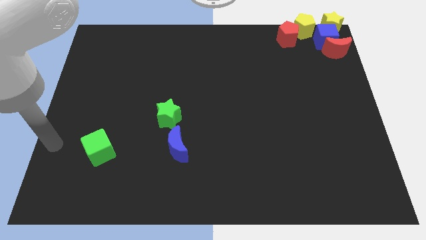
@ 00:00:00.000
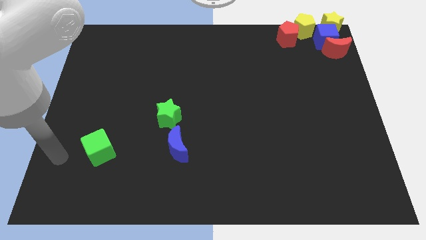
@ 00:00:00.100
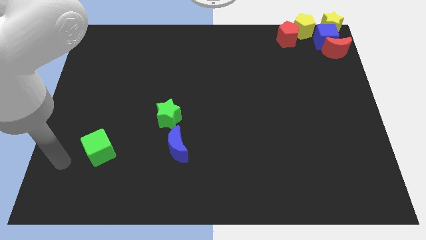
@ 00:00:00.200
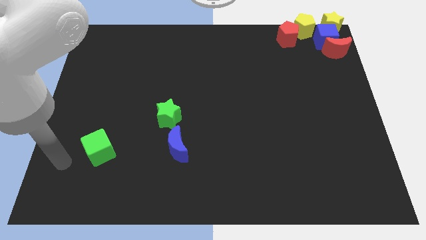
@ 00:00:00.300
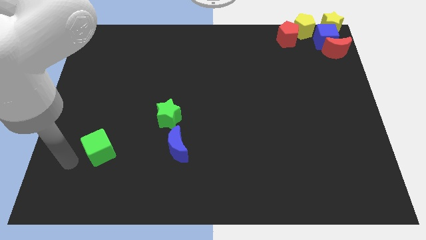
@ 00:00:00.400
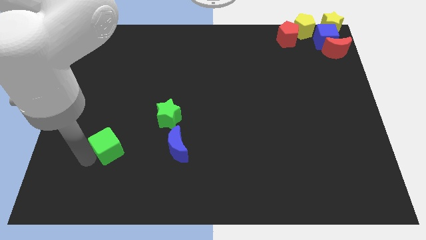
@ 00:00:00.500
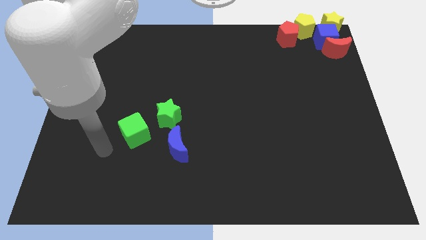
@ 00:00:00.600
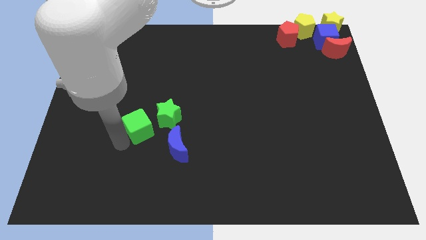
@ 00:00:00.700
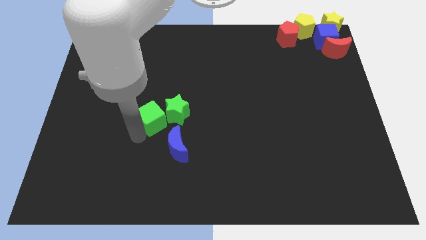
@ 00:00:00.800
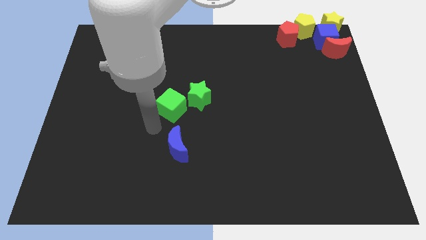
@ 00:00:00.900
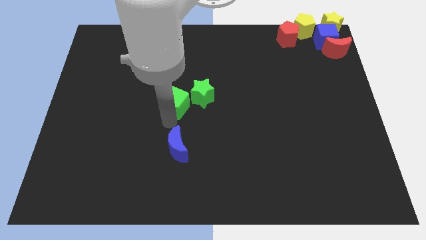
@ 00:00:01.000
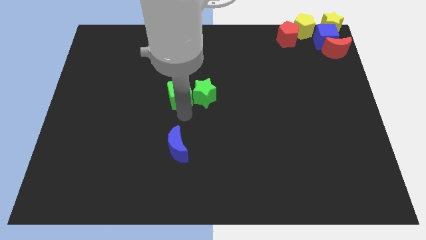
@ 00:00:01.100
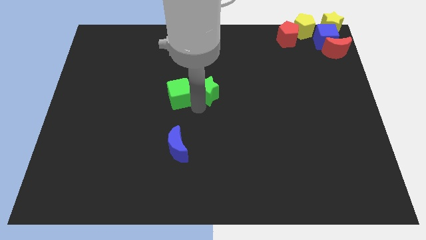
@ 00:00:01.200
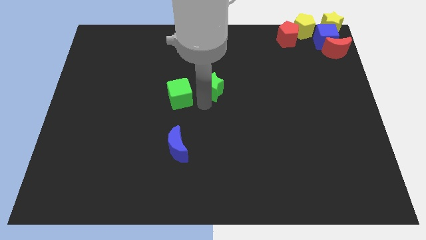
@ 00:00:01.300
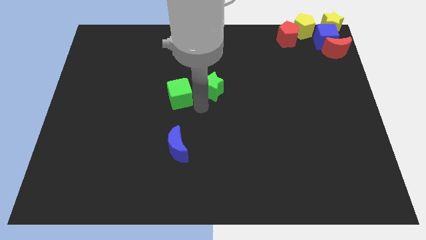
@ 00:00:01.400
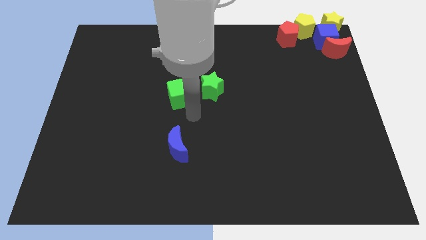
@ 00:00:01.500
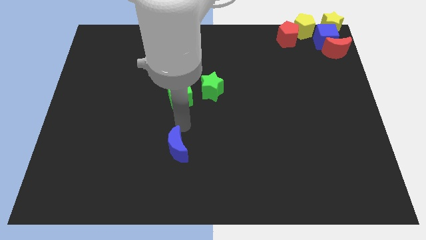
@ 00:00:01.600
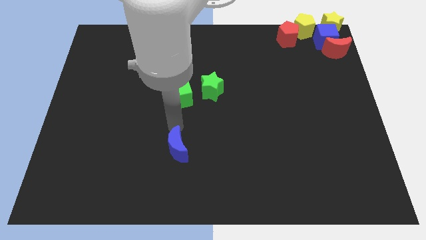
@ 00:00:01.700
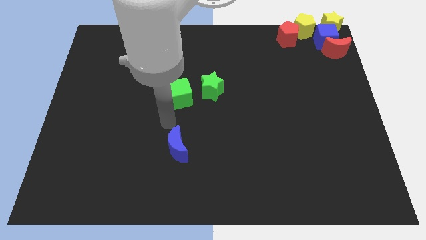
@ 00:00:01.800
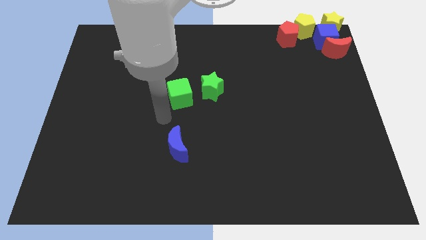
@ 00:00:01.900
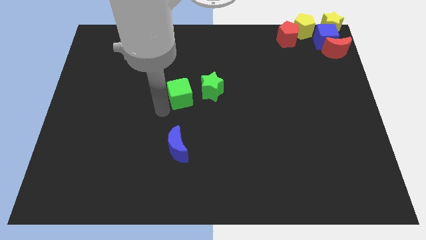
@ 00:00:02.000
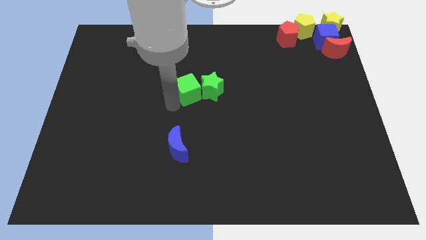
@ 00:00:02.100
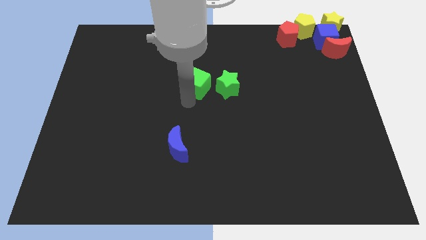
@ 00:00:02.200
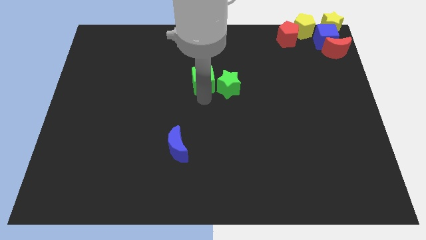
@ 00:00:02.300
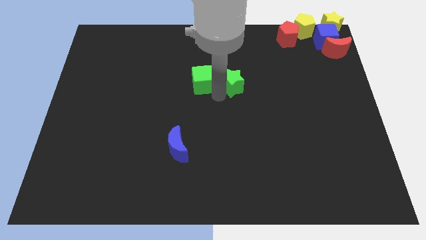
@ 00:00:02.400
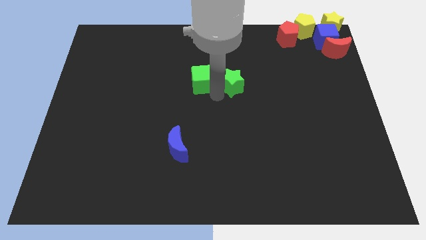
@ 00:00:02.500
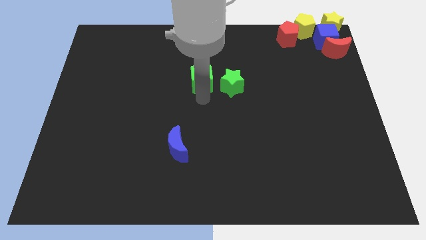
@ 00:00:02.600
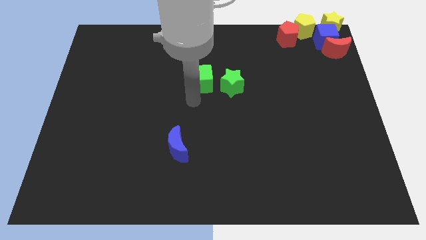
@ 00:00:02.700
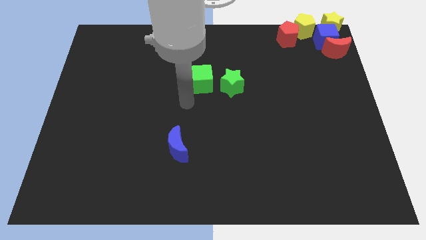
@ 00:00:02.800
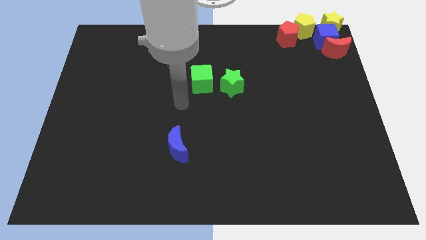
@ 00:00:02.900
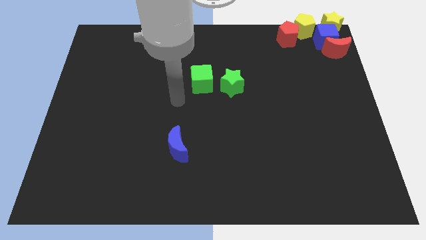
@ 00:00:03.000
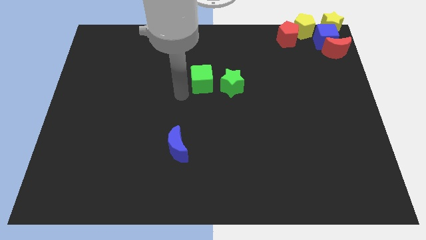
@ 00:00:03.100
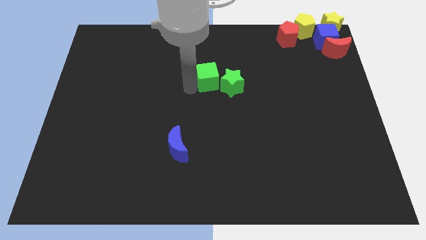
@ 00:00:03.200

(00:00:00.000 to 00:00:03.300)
move the green blocks to the center

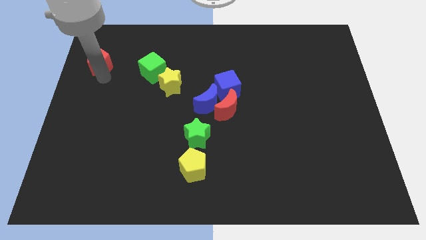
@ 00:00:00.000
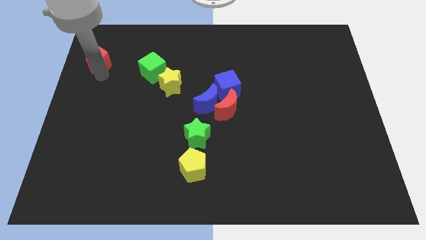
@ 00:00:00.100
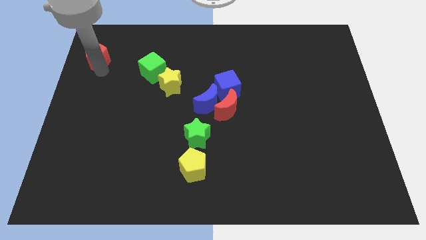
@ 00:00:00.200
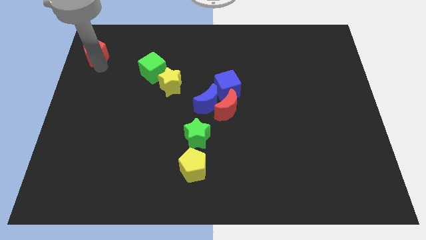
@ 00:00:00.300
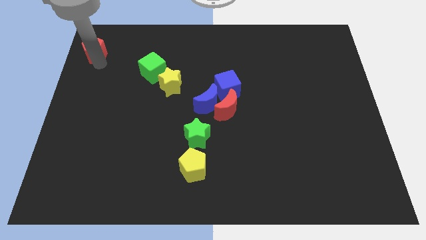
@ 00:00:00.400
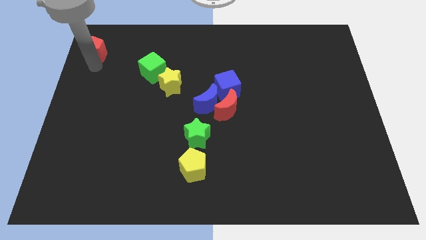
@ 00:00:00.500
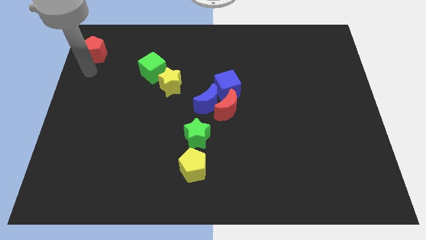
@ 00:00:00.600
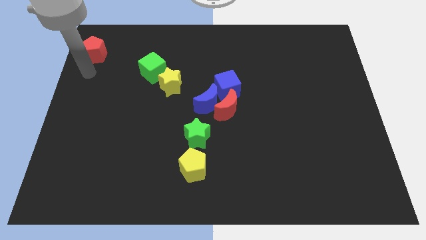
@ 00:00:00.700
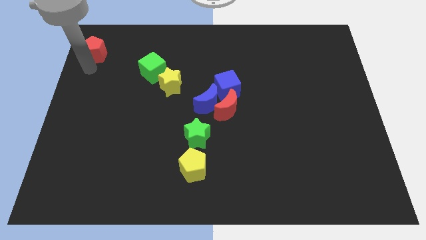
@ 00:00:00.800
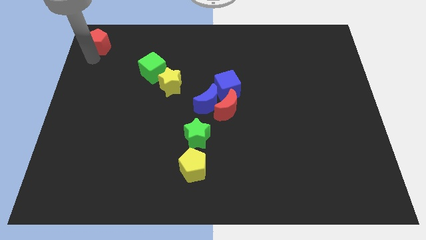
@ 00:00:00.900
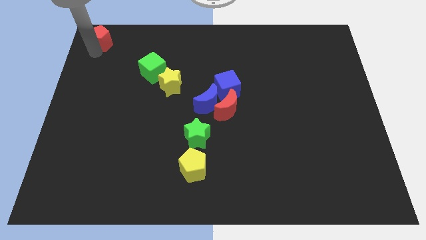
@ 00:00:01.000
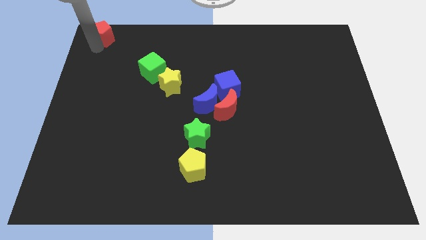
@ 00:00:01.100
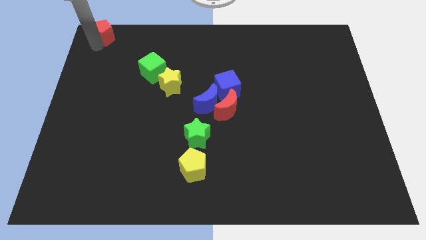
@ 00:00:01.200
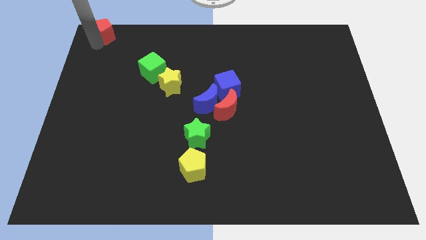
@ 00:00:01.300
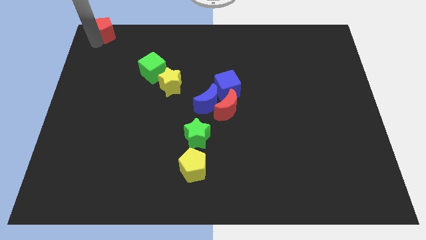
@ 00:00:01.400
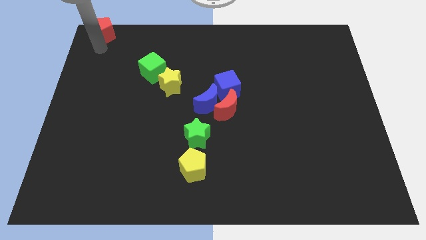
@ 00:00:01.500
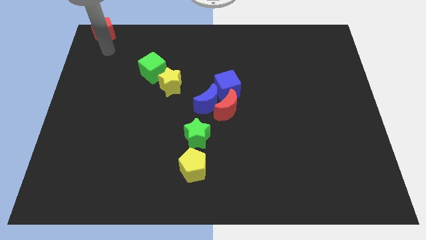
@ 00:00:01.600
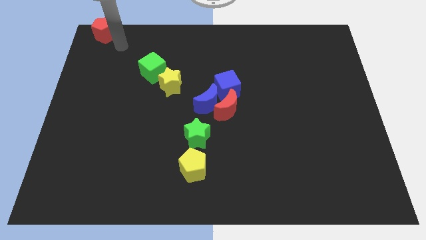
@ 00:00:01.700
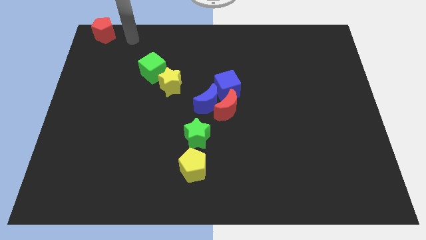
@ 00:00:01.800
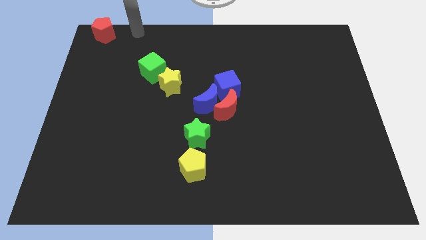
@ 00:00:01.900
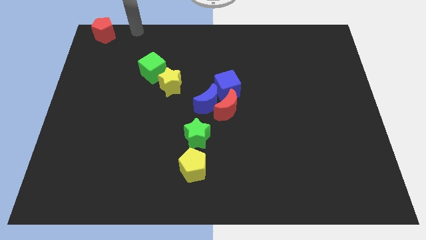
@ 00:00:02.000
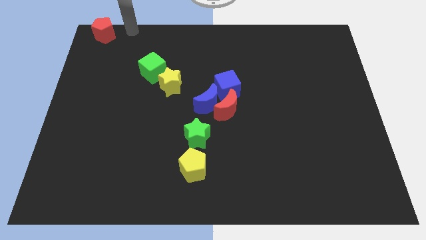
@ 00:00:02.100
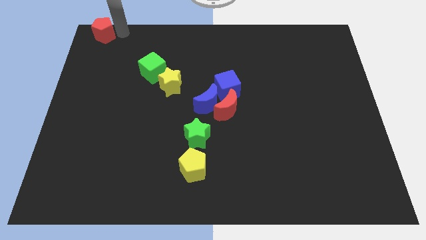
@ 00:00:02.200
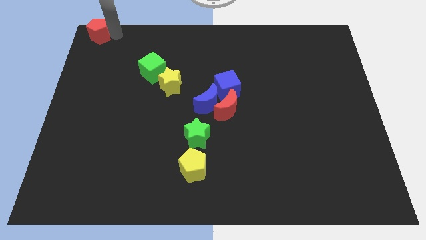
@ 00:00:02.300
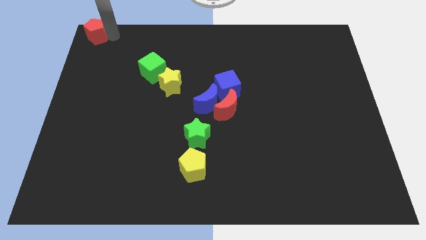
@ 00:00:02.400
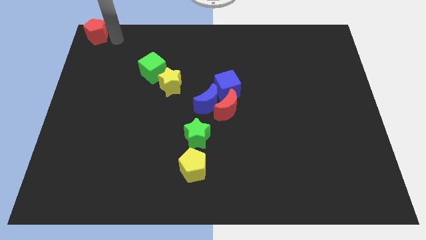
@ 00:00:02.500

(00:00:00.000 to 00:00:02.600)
move the red pentagon to top left corner of the board

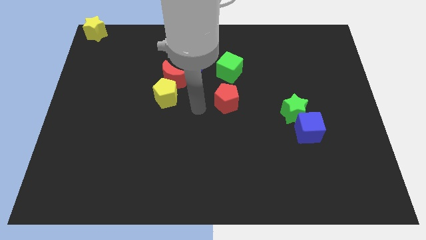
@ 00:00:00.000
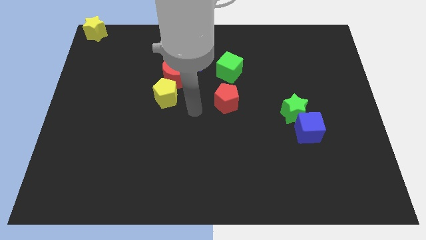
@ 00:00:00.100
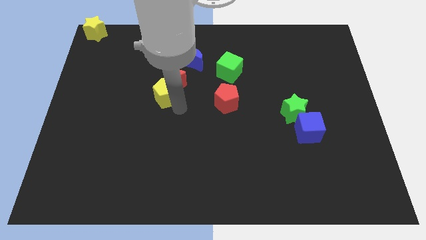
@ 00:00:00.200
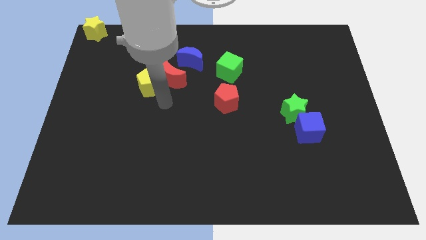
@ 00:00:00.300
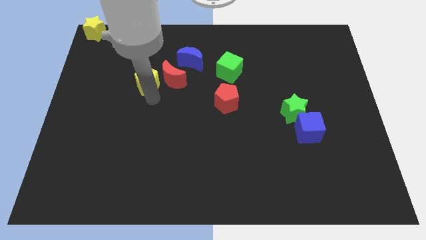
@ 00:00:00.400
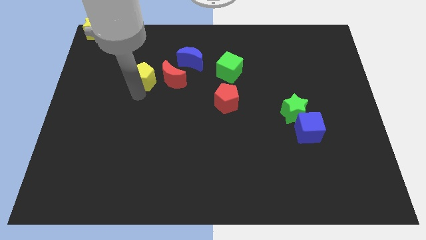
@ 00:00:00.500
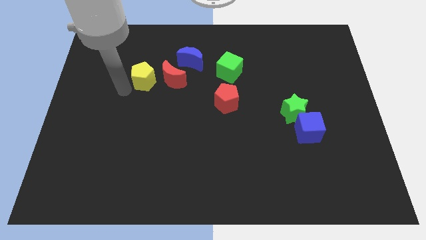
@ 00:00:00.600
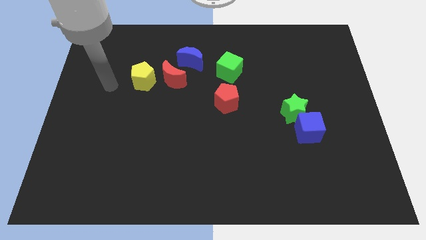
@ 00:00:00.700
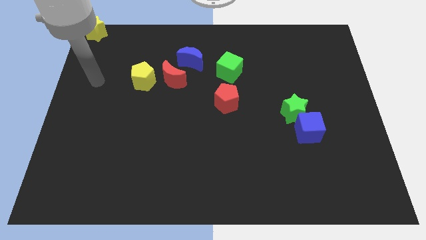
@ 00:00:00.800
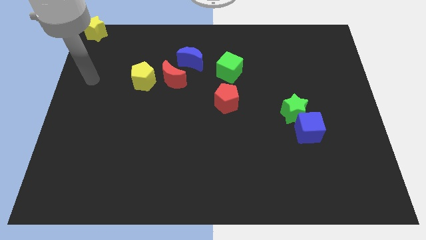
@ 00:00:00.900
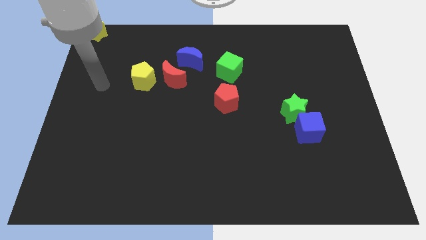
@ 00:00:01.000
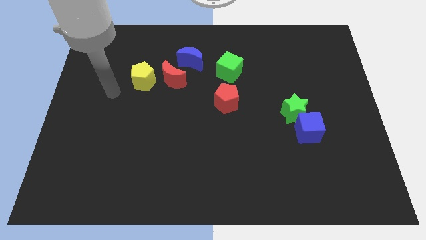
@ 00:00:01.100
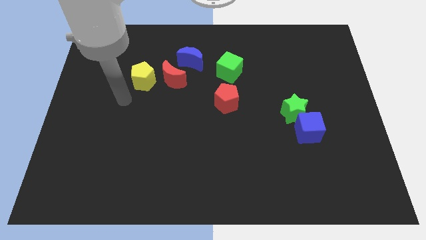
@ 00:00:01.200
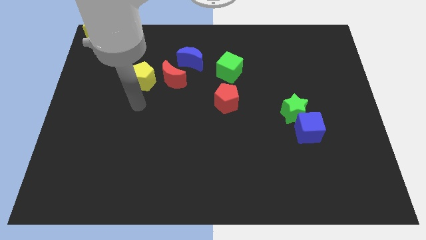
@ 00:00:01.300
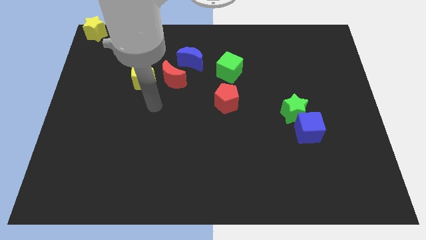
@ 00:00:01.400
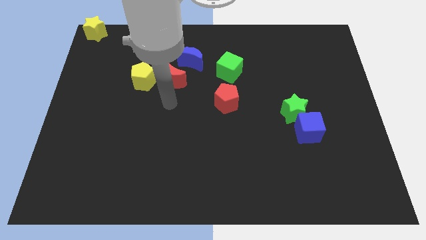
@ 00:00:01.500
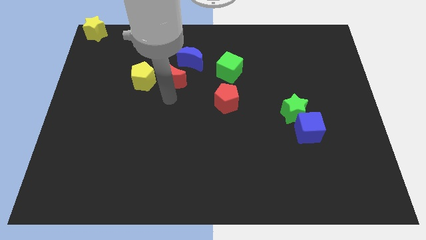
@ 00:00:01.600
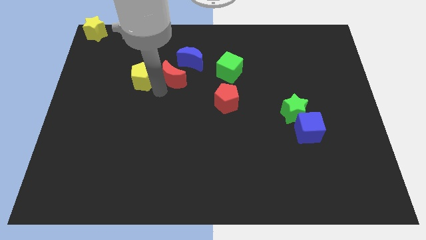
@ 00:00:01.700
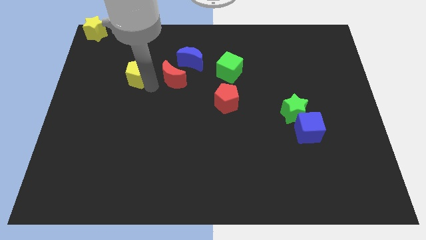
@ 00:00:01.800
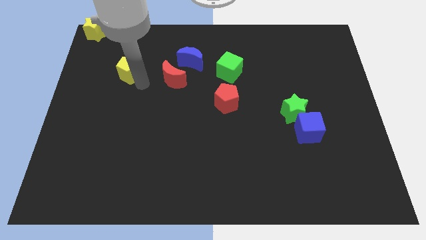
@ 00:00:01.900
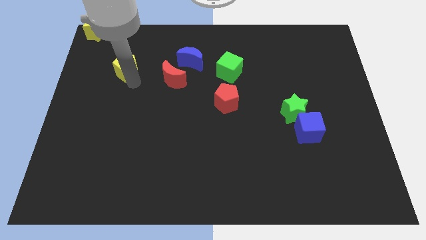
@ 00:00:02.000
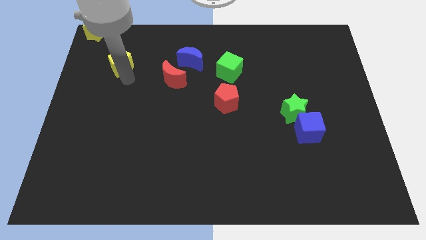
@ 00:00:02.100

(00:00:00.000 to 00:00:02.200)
push the yellow pentagon to the top left corner of the board

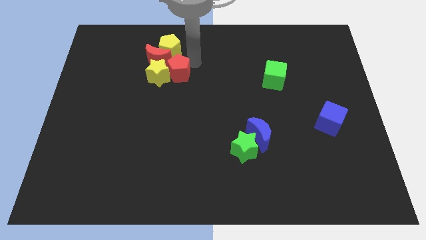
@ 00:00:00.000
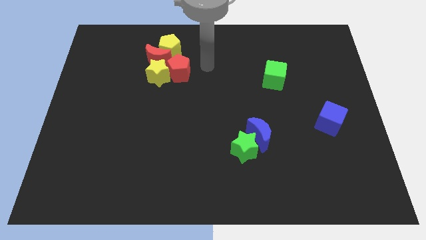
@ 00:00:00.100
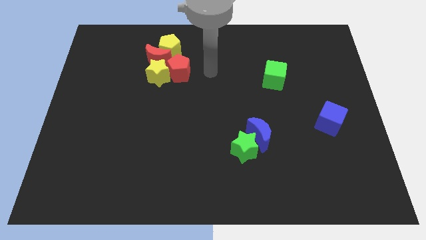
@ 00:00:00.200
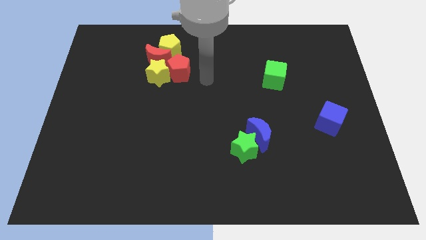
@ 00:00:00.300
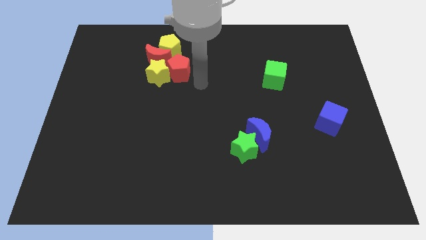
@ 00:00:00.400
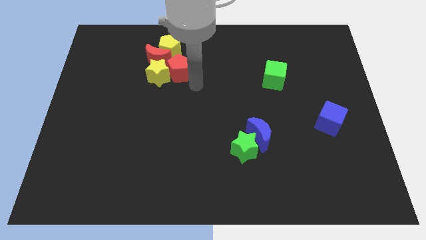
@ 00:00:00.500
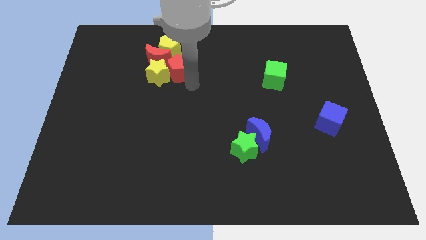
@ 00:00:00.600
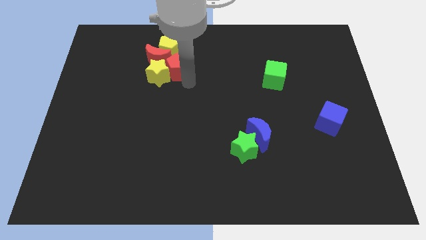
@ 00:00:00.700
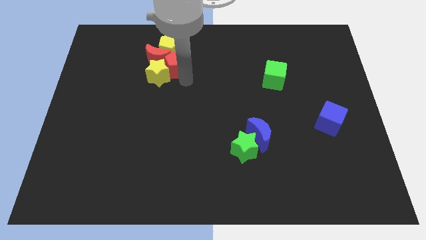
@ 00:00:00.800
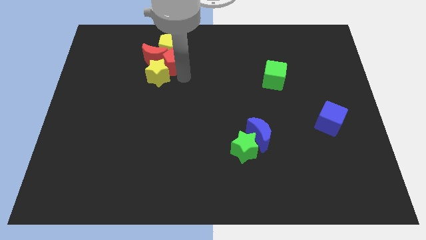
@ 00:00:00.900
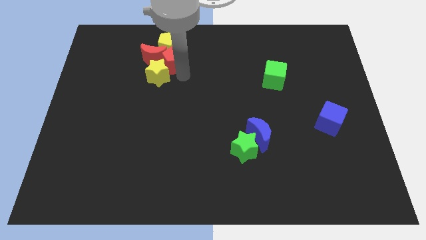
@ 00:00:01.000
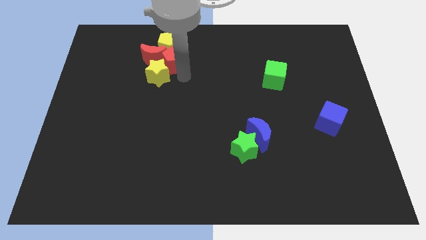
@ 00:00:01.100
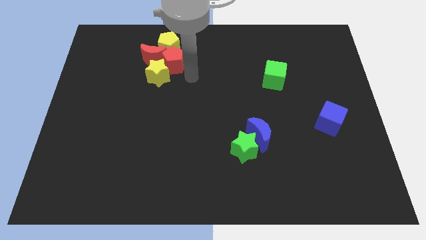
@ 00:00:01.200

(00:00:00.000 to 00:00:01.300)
put the red pentagon beside the red moon
